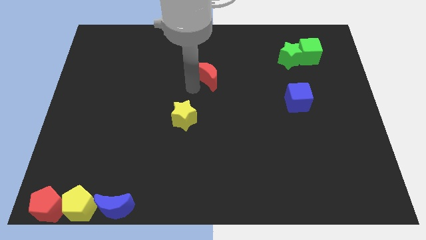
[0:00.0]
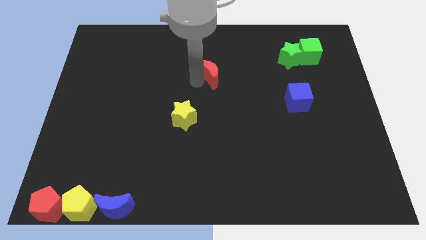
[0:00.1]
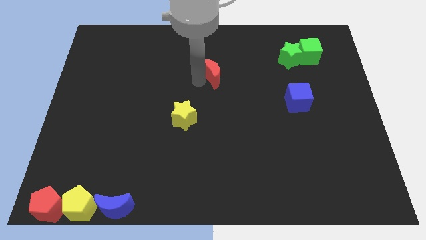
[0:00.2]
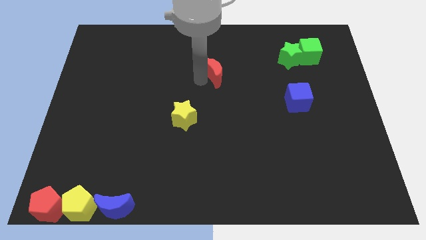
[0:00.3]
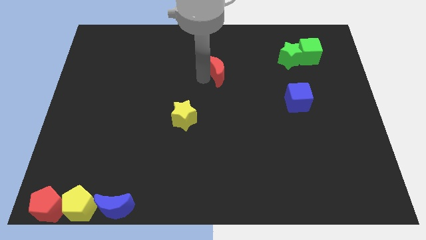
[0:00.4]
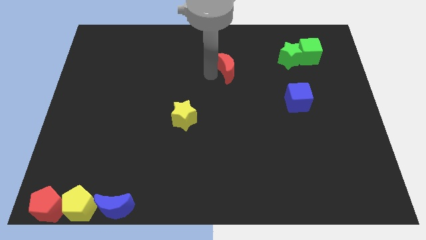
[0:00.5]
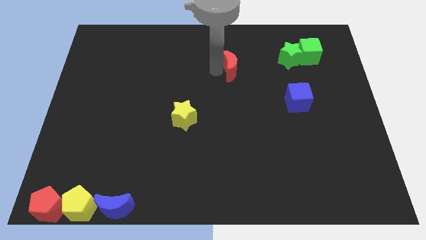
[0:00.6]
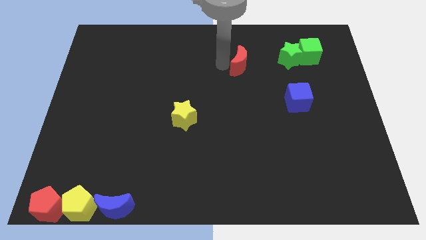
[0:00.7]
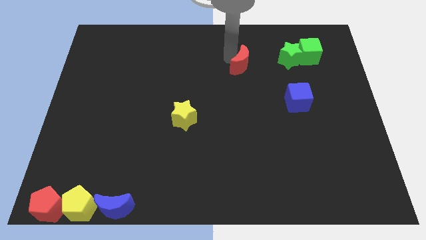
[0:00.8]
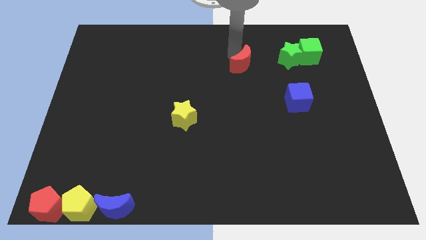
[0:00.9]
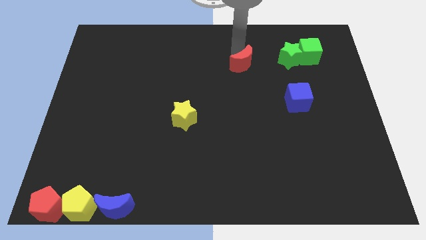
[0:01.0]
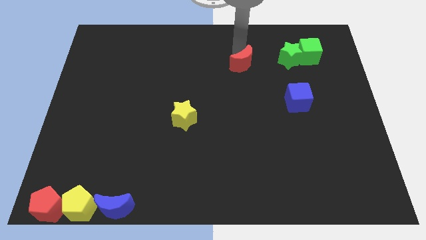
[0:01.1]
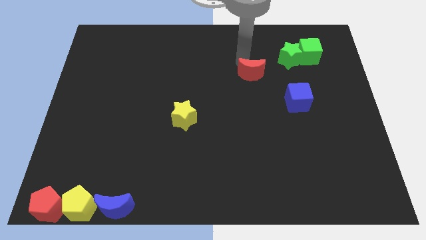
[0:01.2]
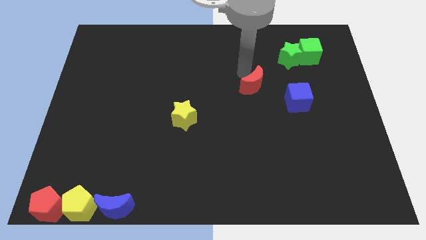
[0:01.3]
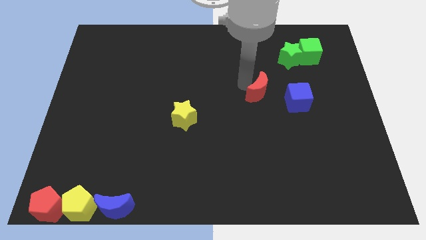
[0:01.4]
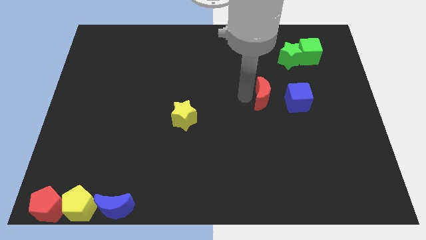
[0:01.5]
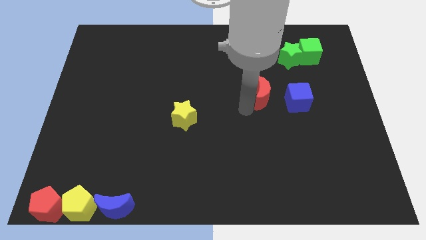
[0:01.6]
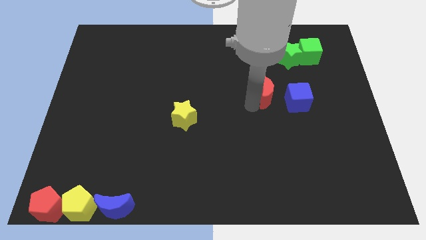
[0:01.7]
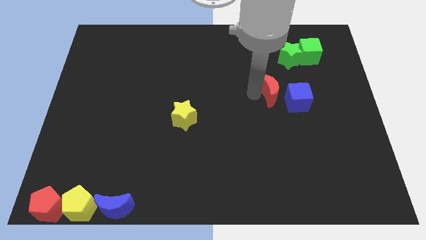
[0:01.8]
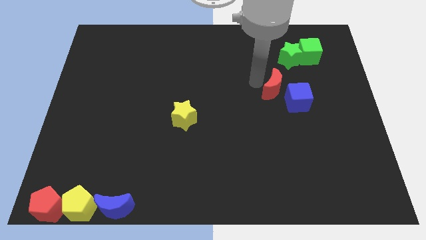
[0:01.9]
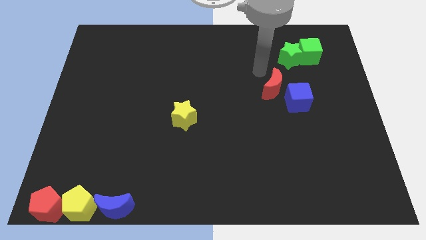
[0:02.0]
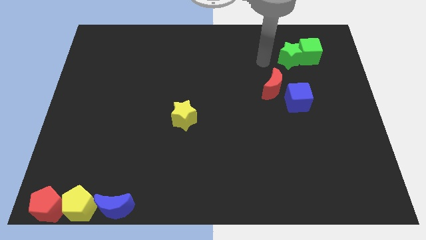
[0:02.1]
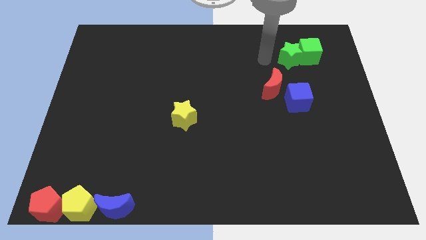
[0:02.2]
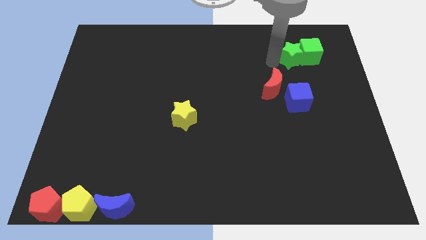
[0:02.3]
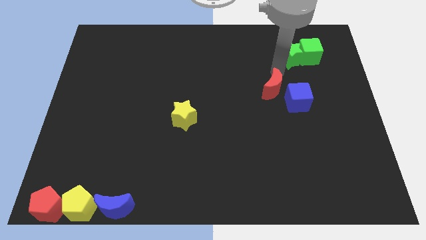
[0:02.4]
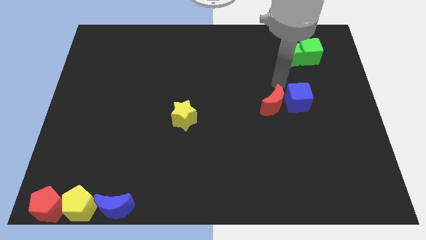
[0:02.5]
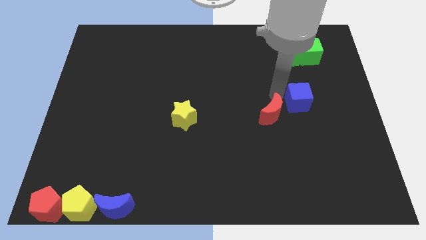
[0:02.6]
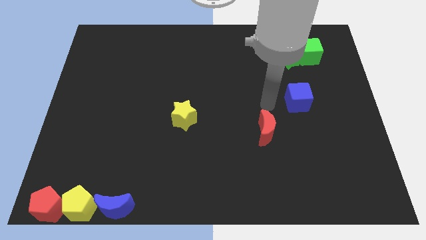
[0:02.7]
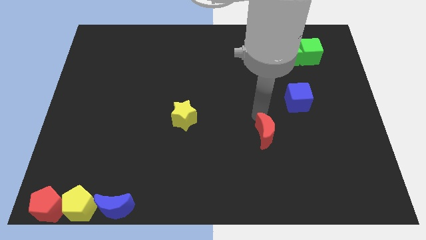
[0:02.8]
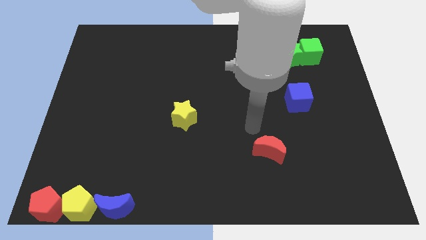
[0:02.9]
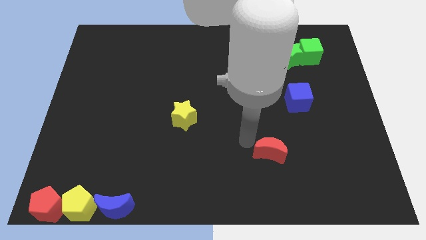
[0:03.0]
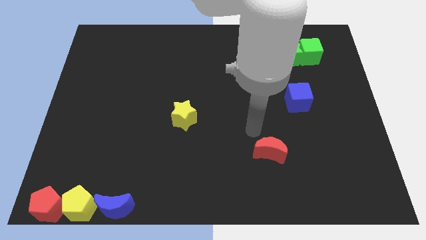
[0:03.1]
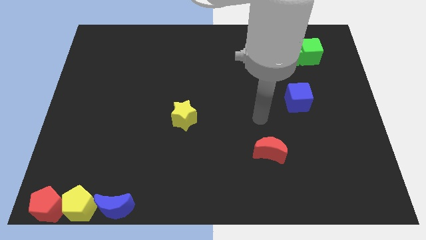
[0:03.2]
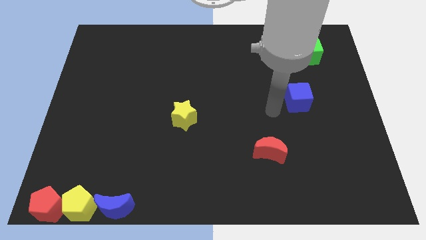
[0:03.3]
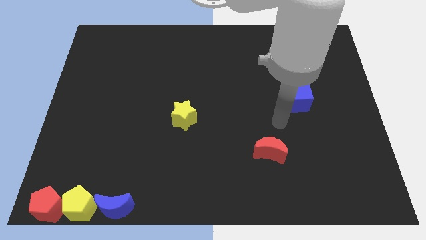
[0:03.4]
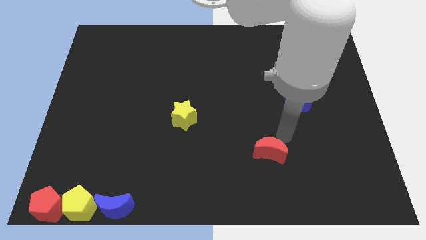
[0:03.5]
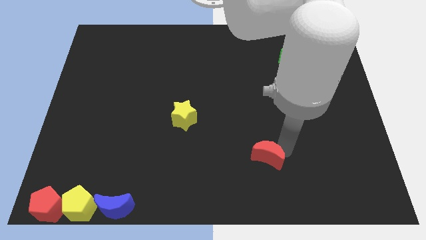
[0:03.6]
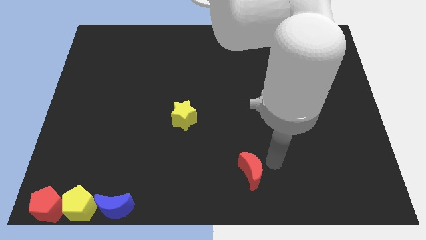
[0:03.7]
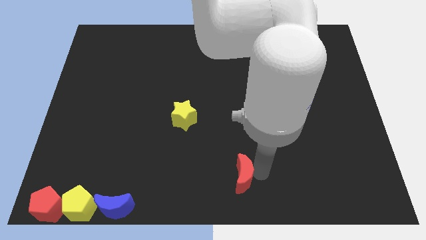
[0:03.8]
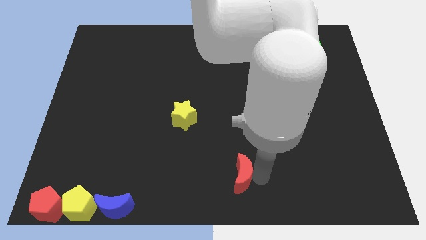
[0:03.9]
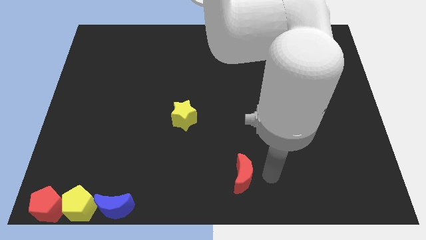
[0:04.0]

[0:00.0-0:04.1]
push the red crescent to the bottom center

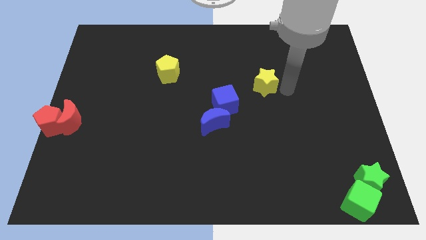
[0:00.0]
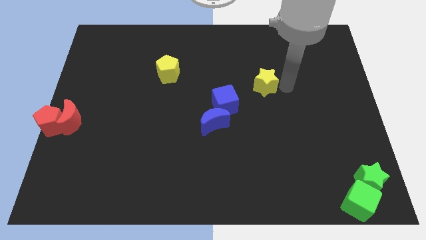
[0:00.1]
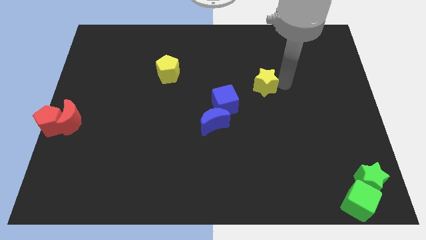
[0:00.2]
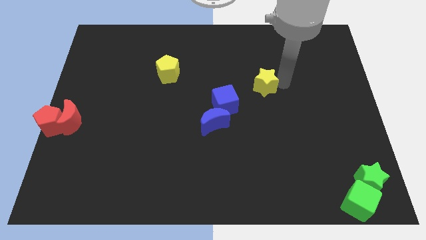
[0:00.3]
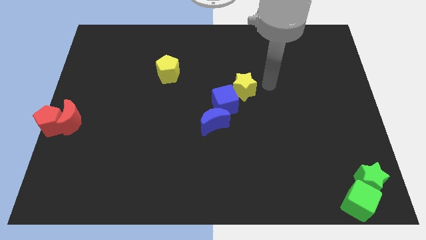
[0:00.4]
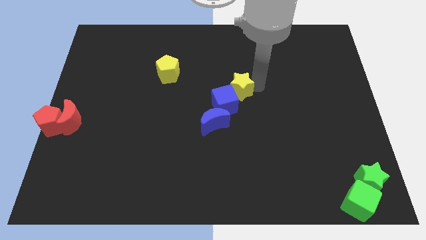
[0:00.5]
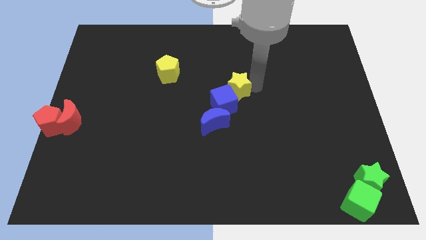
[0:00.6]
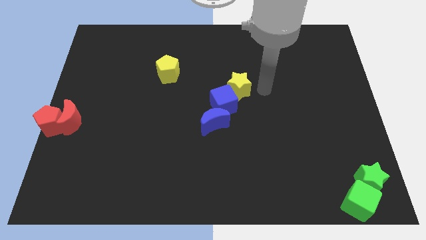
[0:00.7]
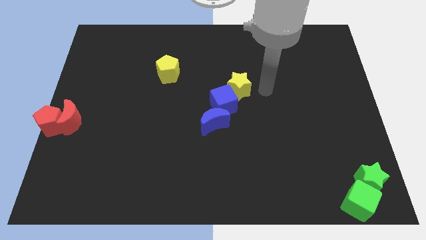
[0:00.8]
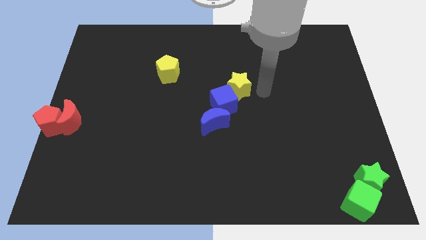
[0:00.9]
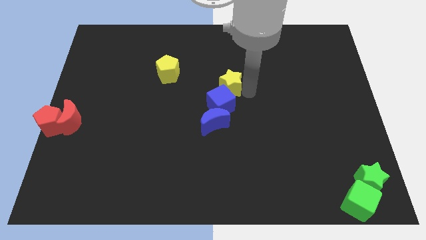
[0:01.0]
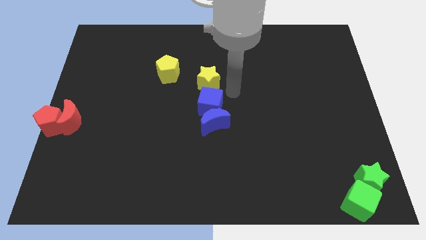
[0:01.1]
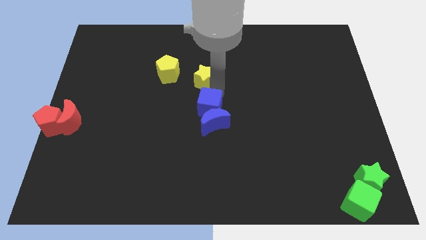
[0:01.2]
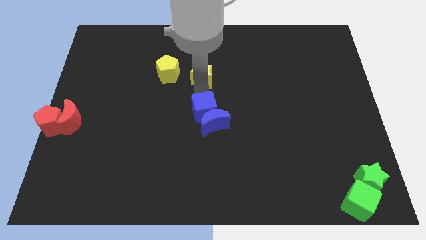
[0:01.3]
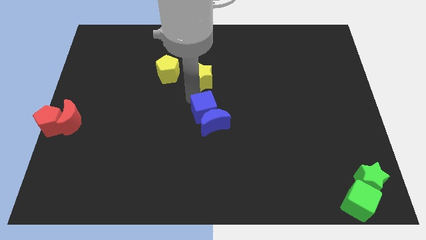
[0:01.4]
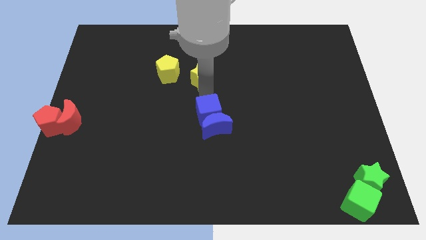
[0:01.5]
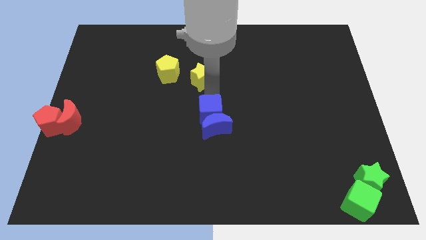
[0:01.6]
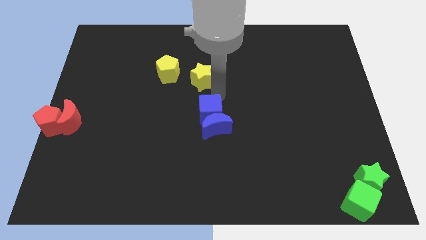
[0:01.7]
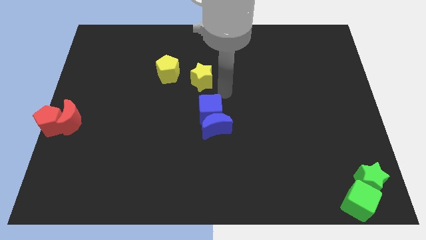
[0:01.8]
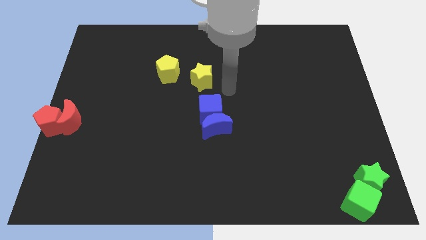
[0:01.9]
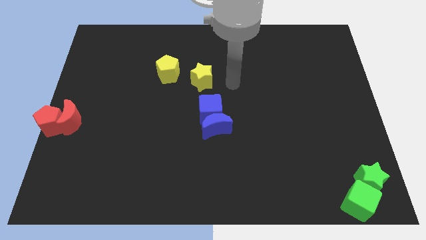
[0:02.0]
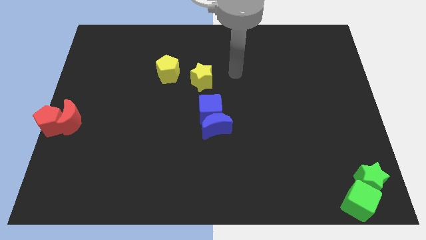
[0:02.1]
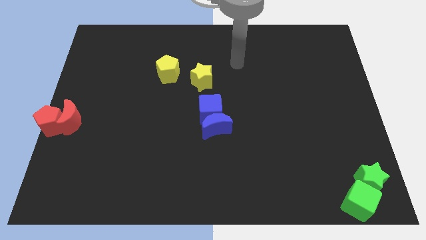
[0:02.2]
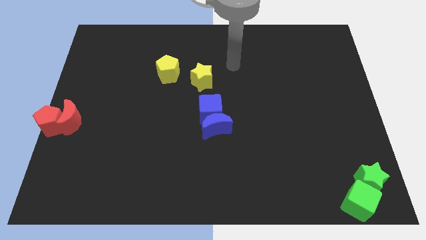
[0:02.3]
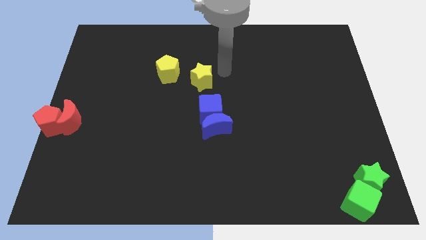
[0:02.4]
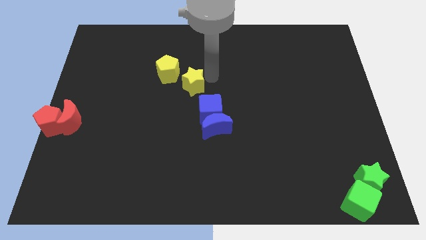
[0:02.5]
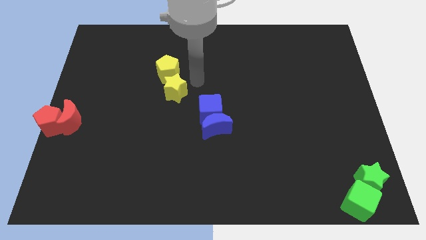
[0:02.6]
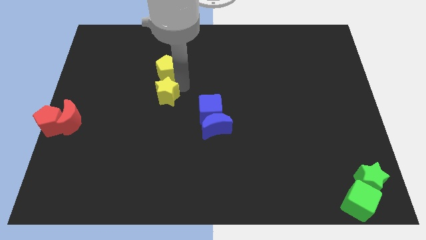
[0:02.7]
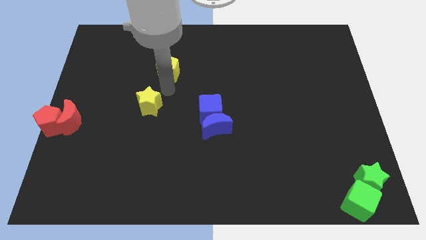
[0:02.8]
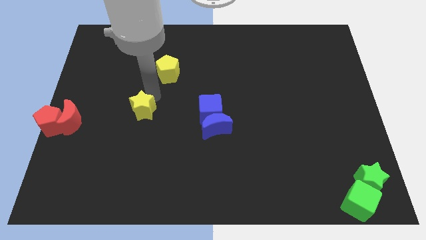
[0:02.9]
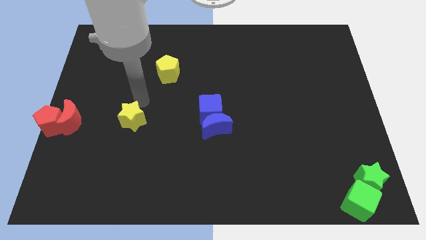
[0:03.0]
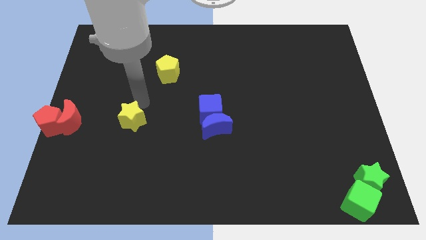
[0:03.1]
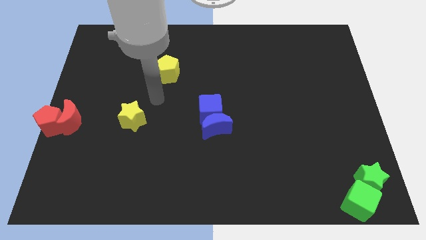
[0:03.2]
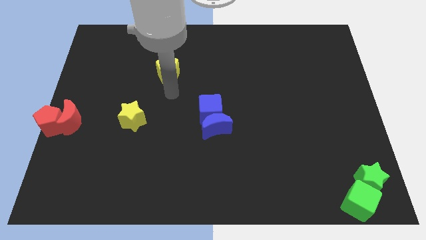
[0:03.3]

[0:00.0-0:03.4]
place the yellow star parallel right to the red blocks

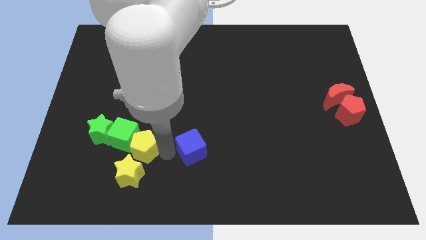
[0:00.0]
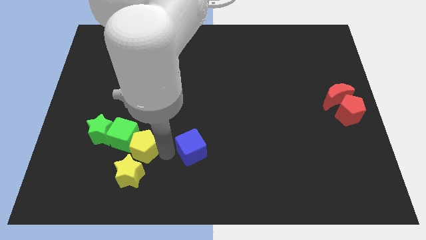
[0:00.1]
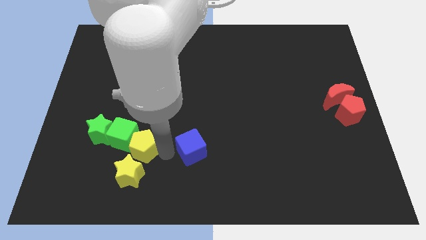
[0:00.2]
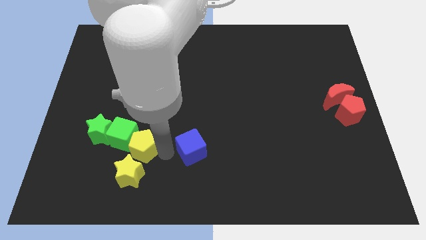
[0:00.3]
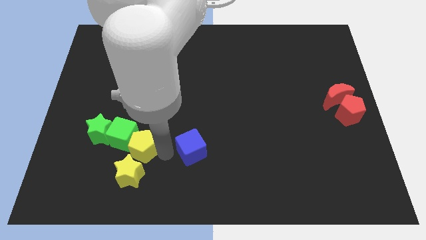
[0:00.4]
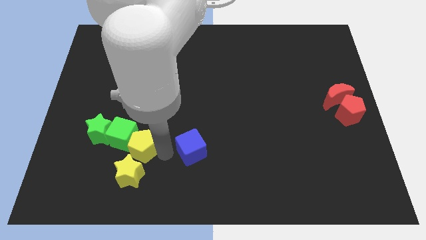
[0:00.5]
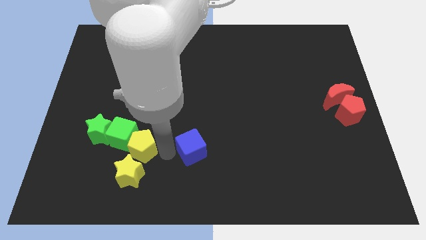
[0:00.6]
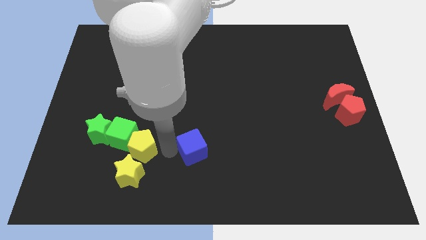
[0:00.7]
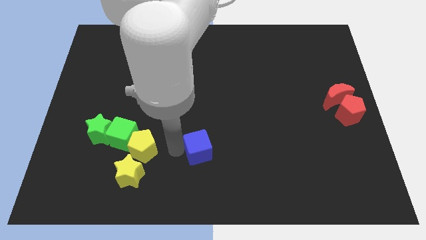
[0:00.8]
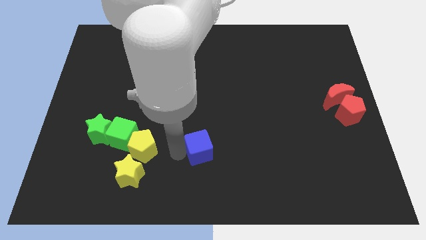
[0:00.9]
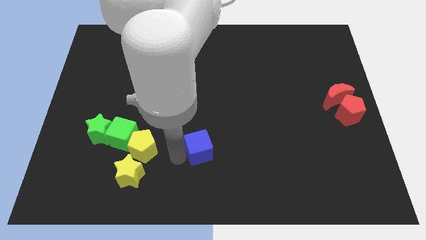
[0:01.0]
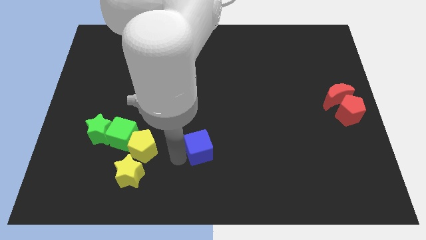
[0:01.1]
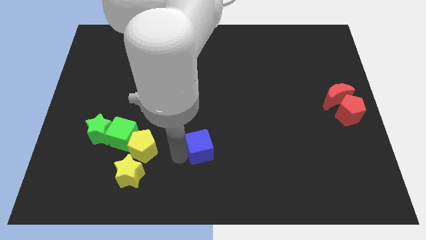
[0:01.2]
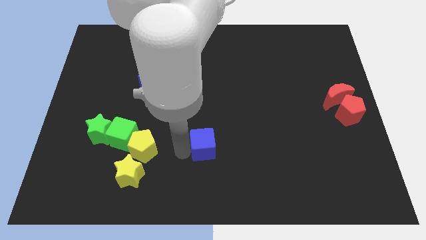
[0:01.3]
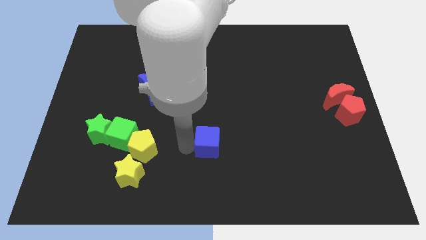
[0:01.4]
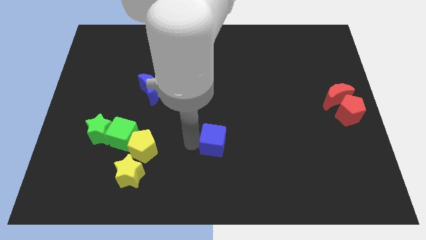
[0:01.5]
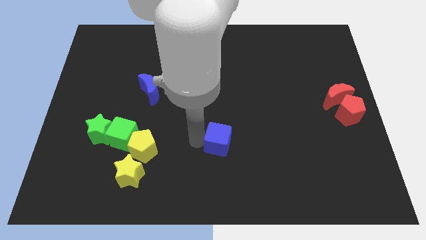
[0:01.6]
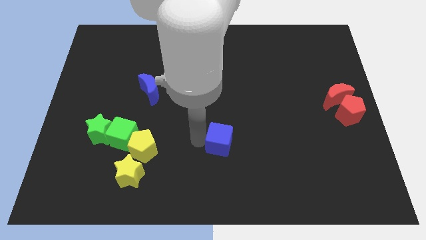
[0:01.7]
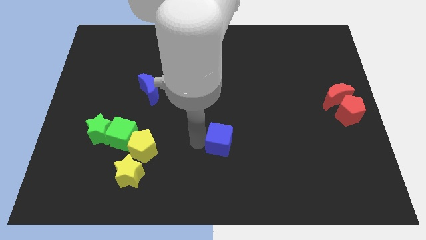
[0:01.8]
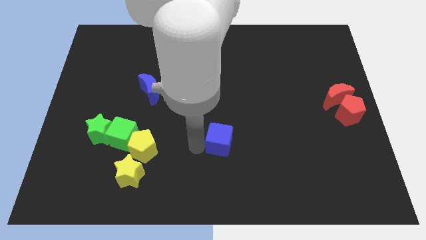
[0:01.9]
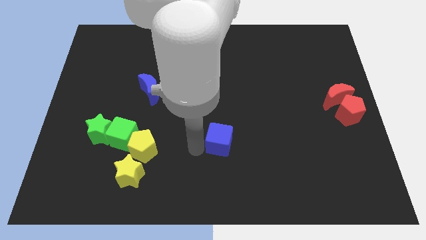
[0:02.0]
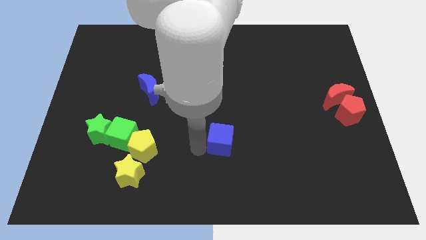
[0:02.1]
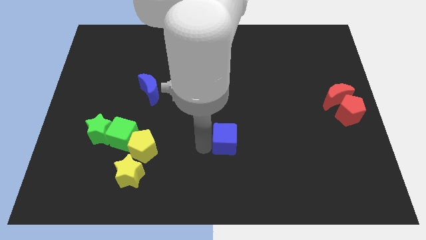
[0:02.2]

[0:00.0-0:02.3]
separate the blue cube from the group of blocks
